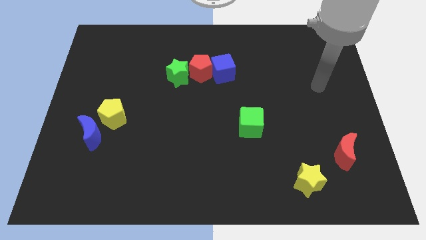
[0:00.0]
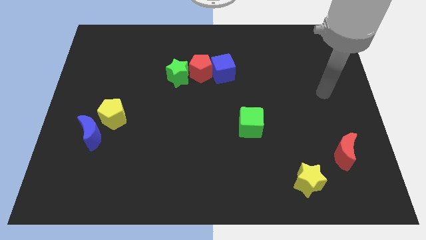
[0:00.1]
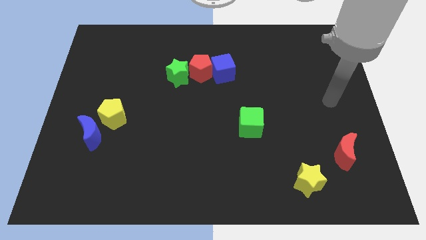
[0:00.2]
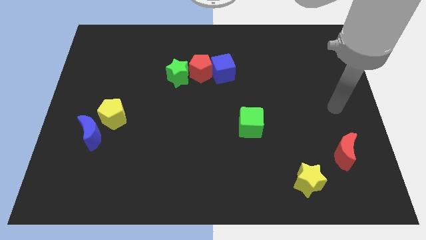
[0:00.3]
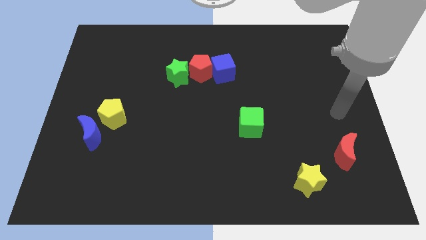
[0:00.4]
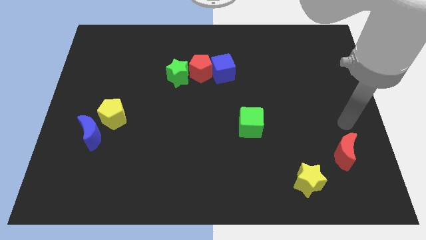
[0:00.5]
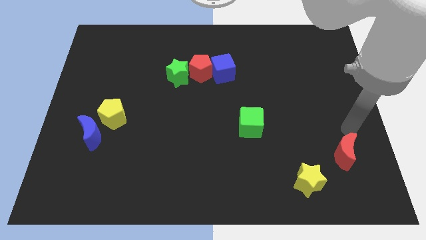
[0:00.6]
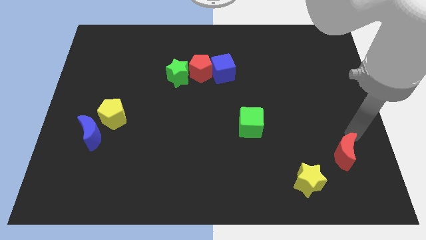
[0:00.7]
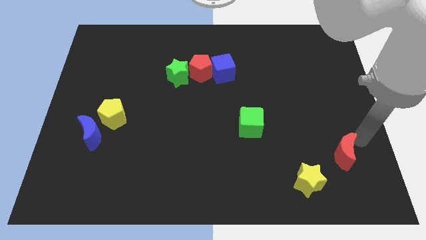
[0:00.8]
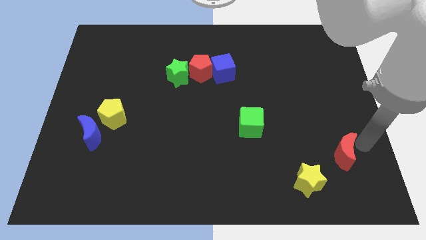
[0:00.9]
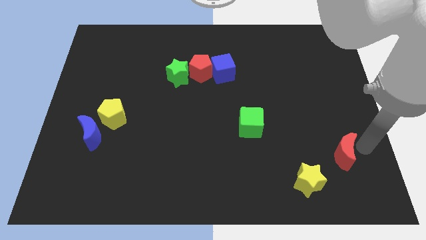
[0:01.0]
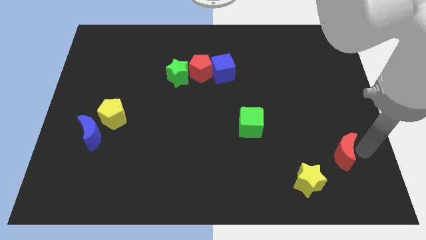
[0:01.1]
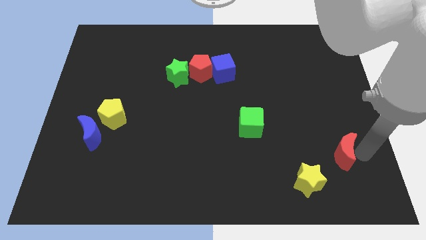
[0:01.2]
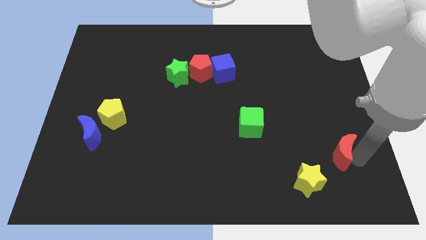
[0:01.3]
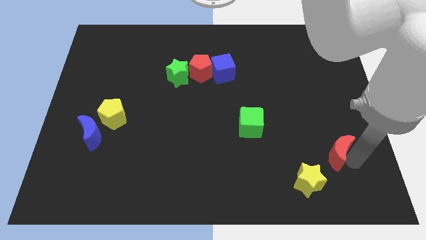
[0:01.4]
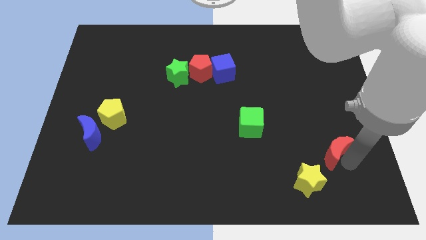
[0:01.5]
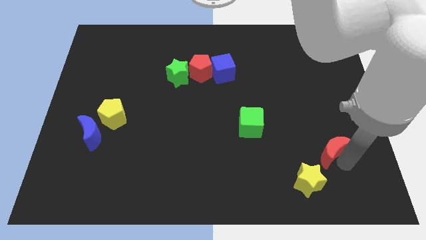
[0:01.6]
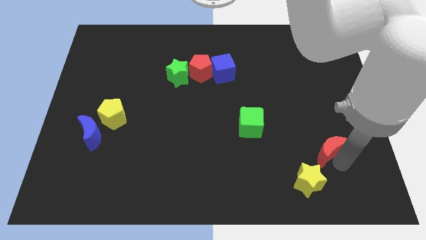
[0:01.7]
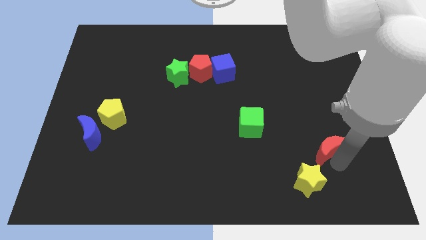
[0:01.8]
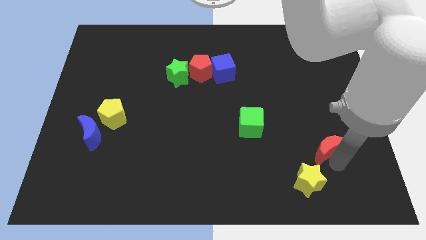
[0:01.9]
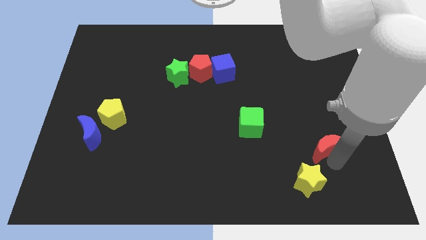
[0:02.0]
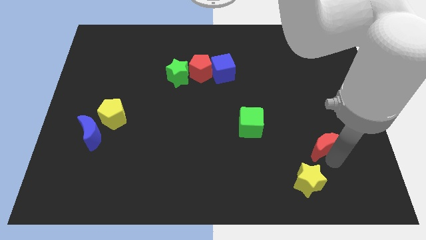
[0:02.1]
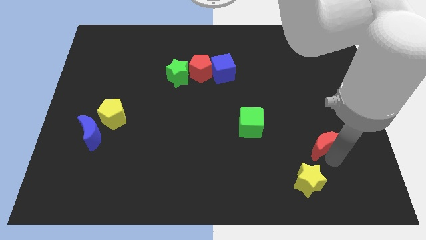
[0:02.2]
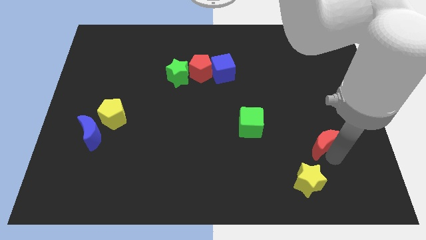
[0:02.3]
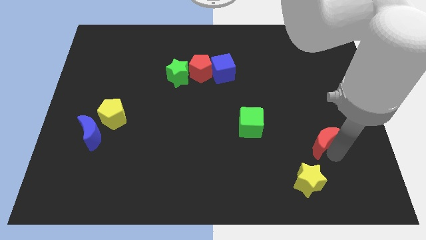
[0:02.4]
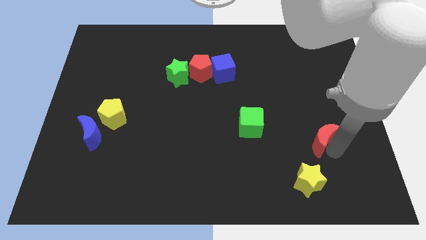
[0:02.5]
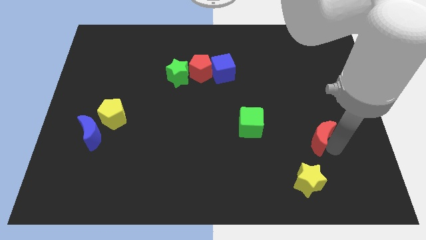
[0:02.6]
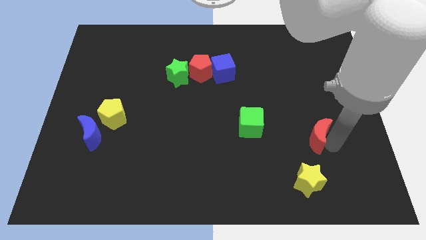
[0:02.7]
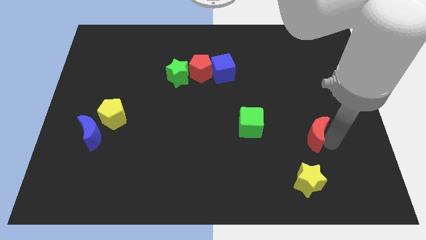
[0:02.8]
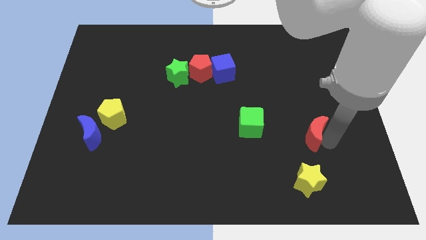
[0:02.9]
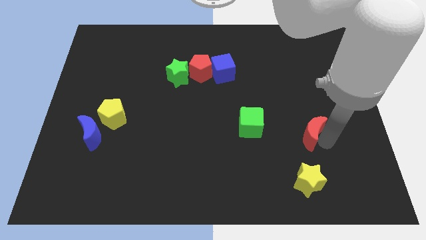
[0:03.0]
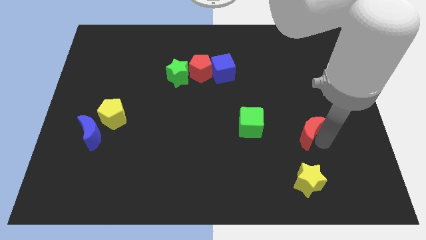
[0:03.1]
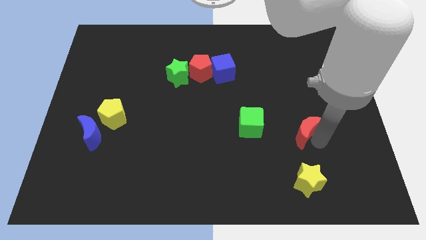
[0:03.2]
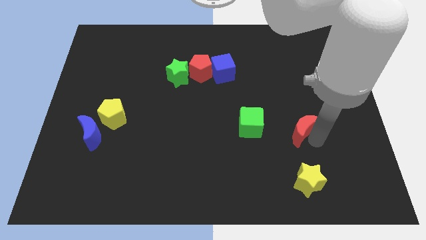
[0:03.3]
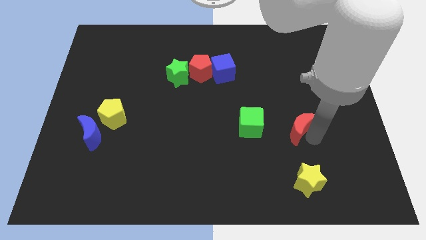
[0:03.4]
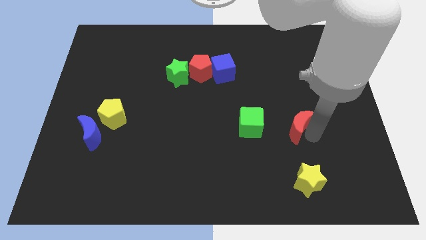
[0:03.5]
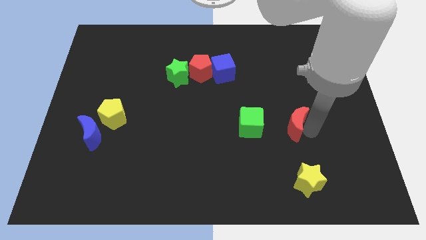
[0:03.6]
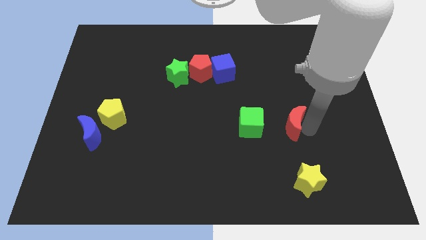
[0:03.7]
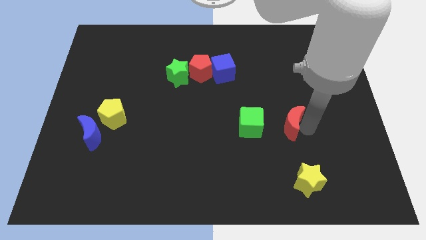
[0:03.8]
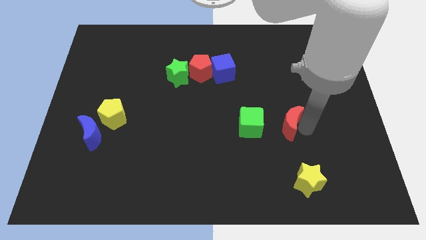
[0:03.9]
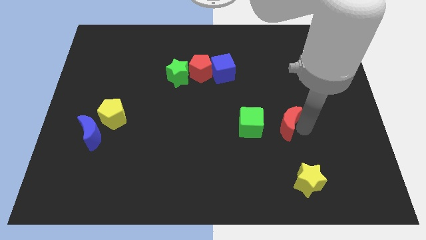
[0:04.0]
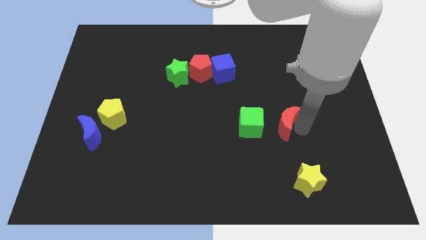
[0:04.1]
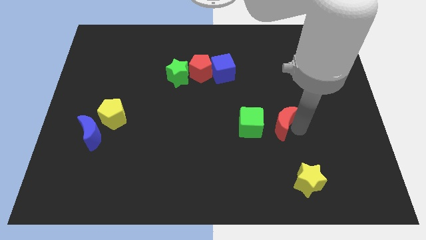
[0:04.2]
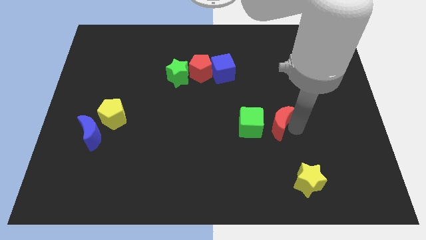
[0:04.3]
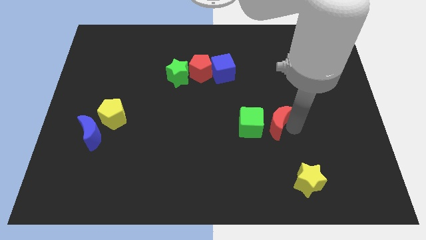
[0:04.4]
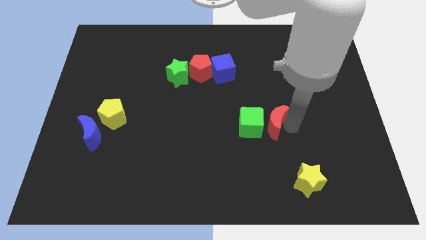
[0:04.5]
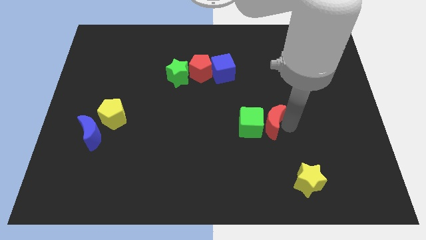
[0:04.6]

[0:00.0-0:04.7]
move the red moon to the green cube

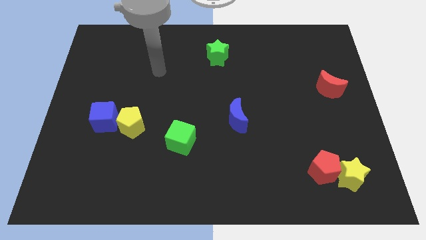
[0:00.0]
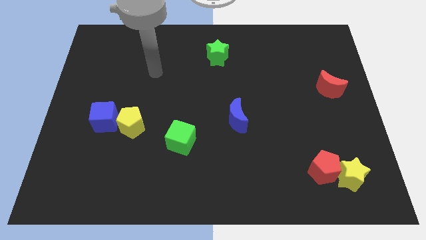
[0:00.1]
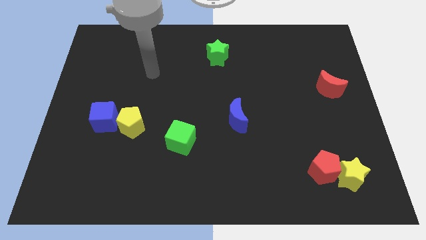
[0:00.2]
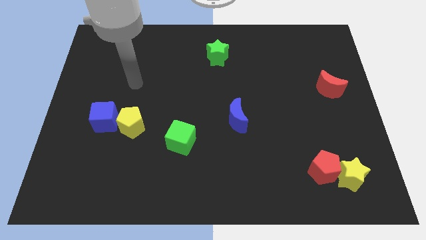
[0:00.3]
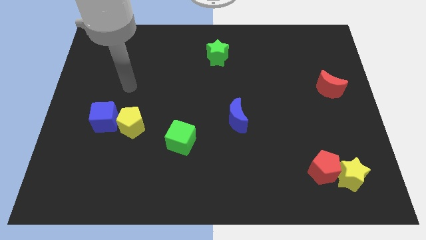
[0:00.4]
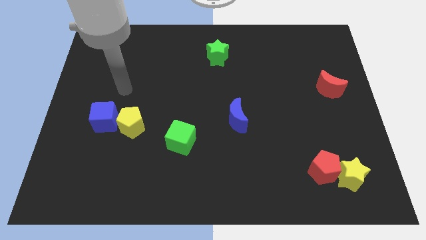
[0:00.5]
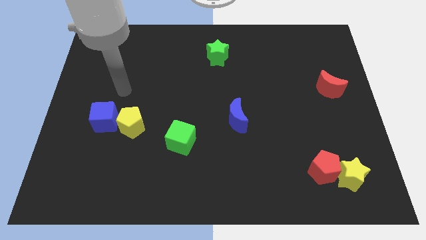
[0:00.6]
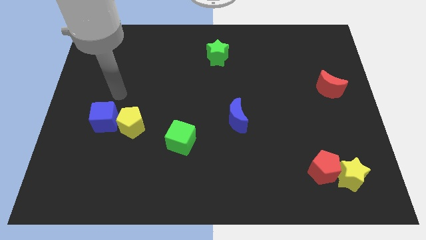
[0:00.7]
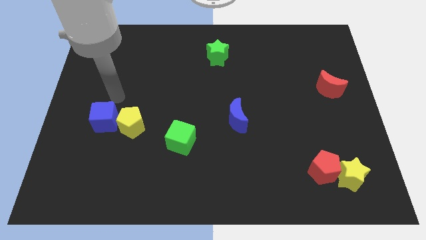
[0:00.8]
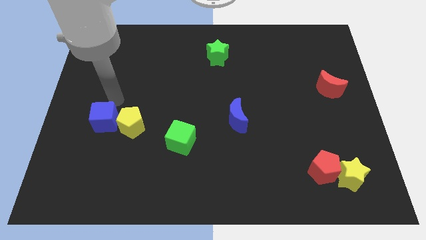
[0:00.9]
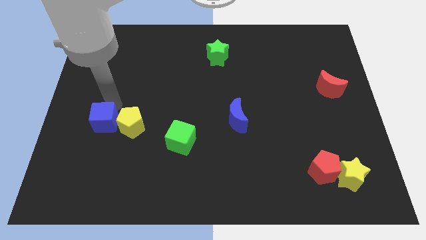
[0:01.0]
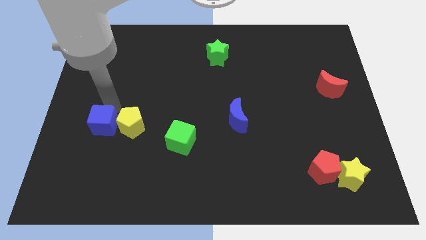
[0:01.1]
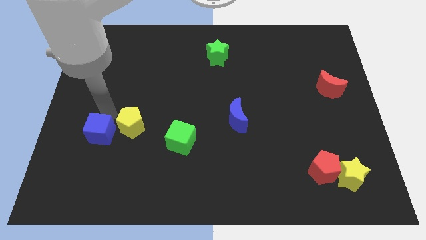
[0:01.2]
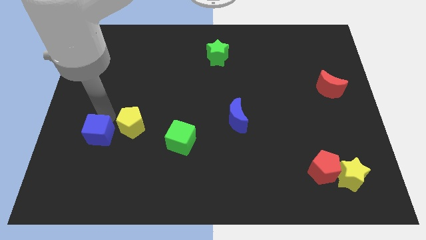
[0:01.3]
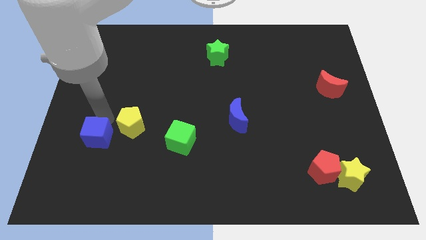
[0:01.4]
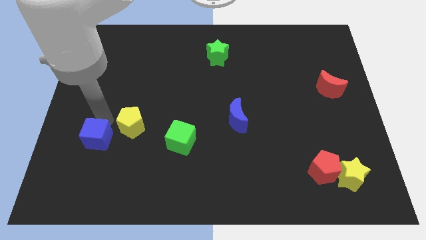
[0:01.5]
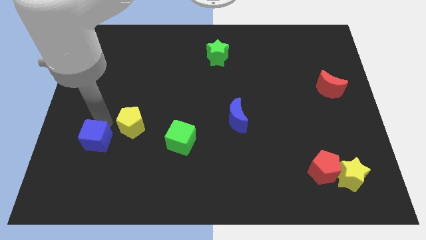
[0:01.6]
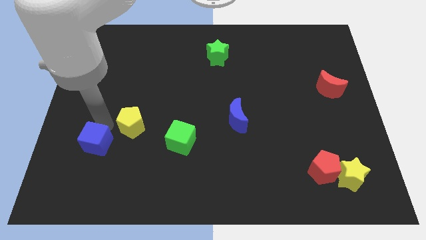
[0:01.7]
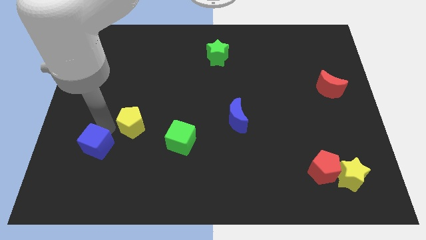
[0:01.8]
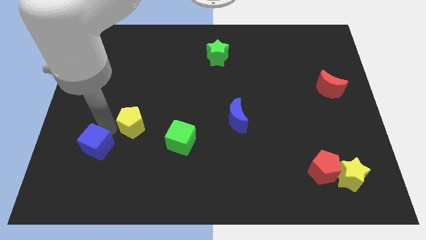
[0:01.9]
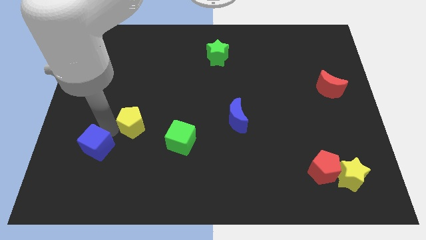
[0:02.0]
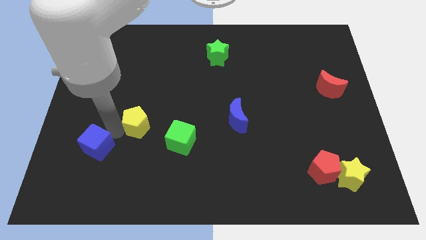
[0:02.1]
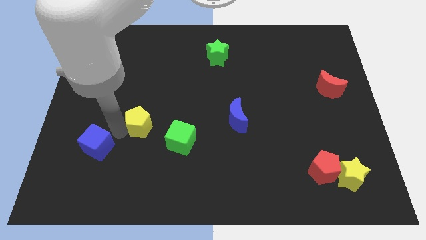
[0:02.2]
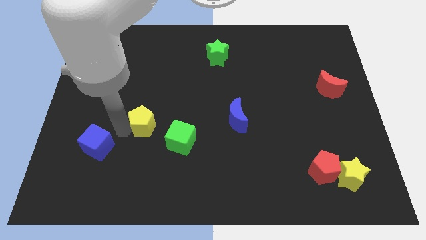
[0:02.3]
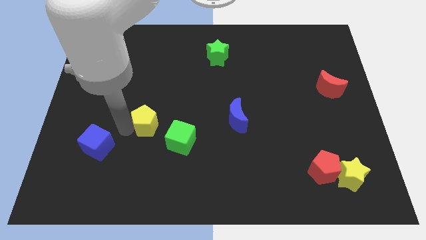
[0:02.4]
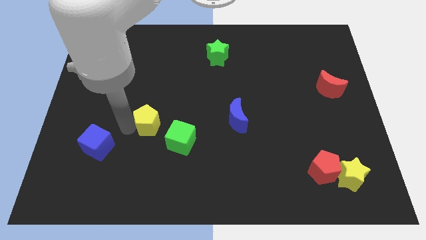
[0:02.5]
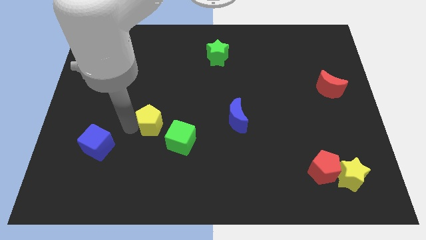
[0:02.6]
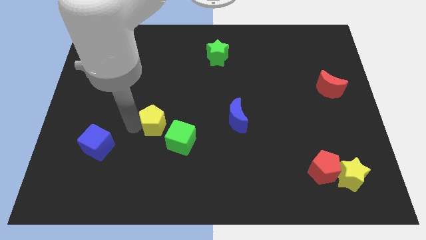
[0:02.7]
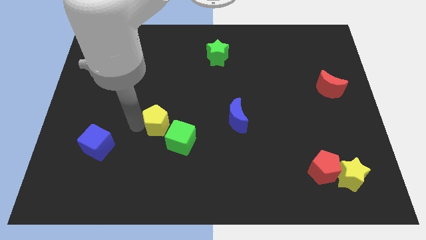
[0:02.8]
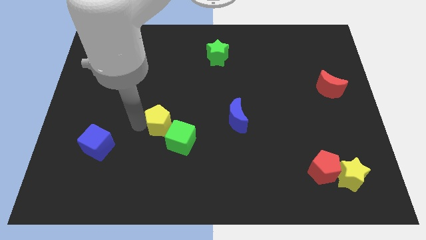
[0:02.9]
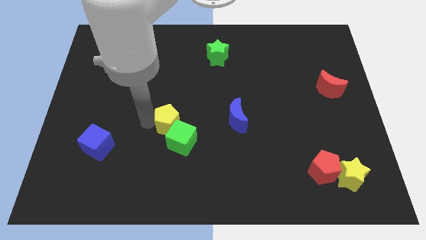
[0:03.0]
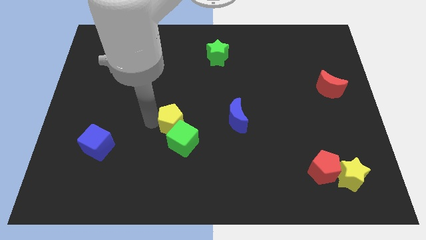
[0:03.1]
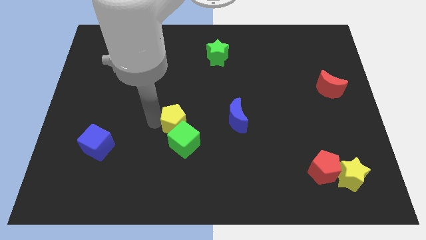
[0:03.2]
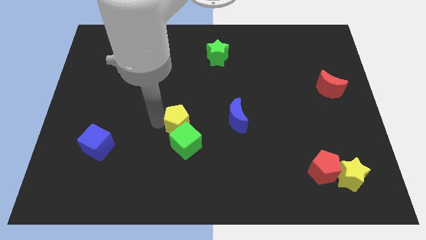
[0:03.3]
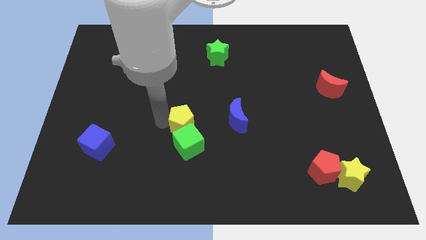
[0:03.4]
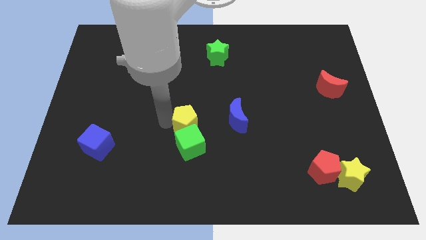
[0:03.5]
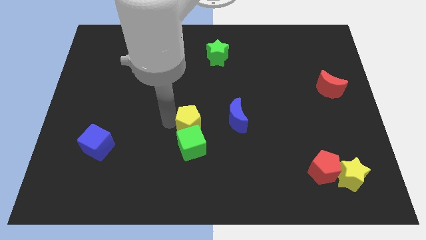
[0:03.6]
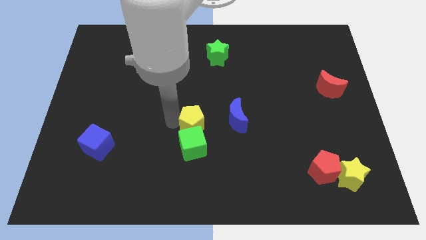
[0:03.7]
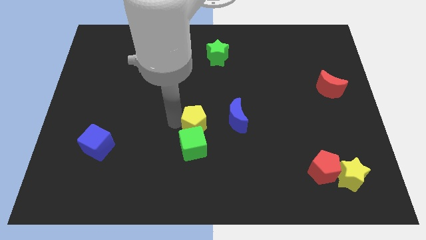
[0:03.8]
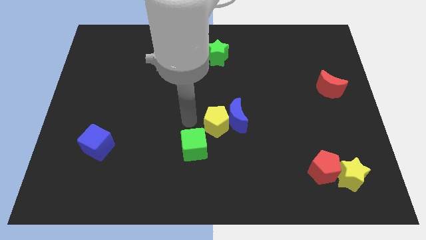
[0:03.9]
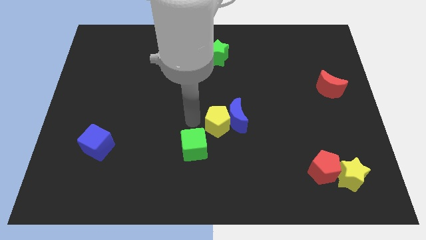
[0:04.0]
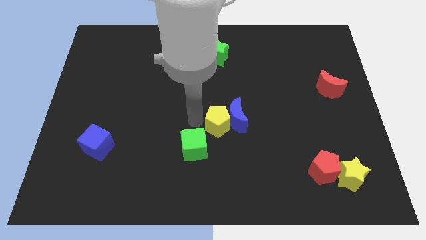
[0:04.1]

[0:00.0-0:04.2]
move the yellow pentagon next to the blue moon
